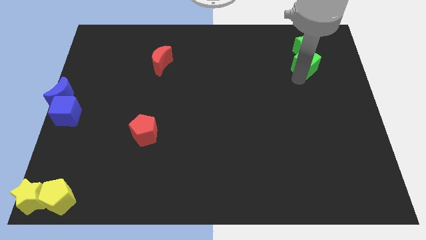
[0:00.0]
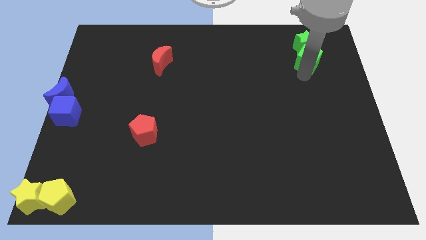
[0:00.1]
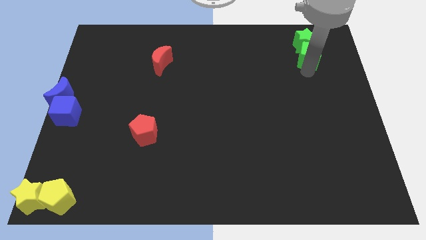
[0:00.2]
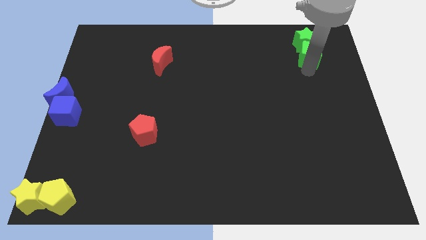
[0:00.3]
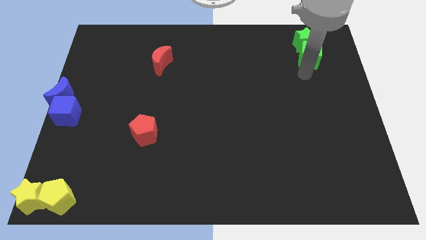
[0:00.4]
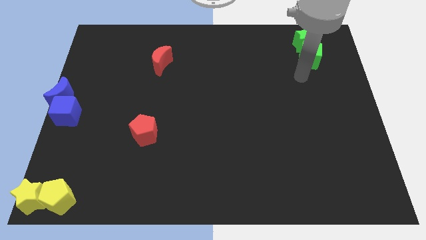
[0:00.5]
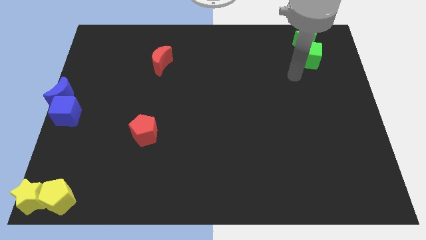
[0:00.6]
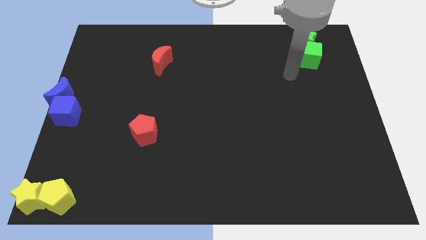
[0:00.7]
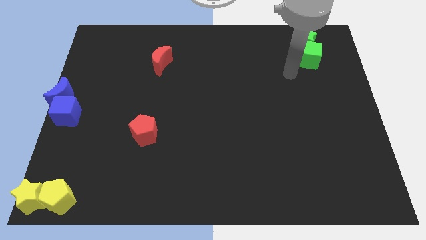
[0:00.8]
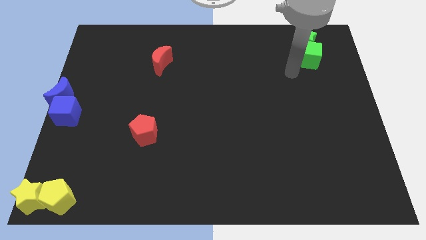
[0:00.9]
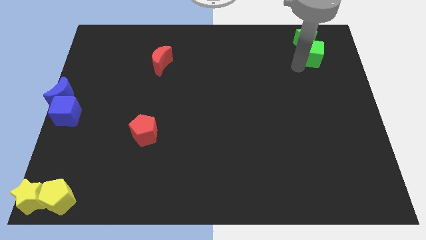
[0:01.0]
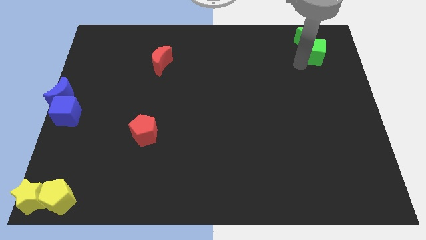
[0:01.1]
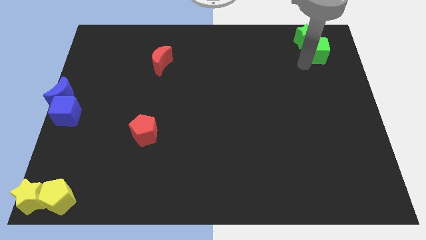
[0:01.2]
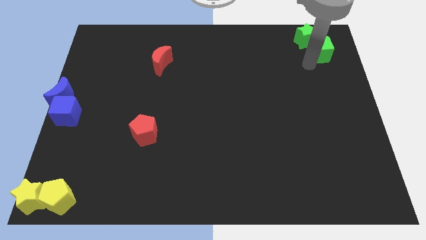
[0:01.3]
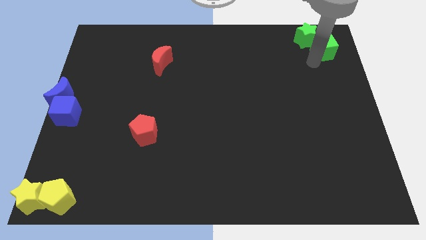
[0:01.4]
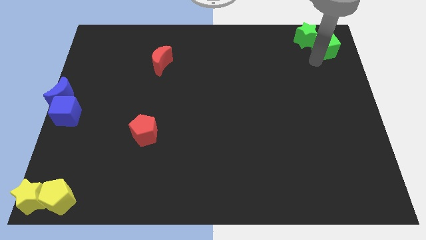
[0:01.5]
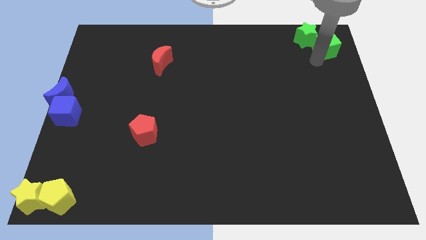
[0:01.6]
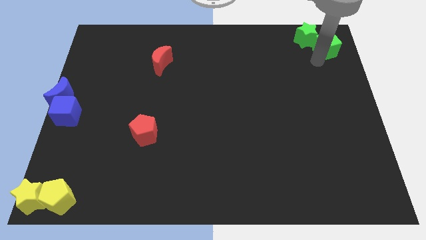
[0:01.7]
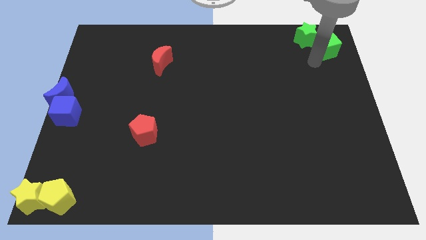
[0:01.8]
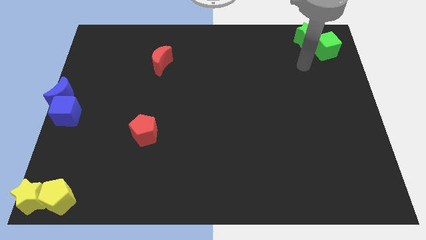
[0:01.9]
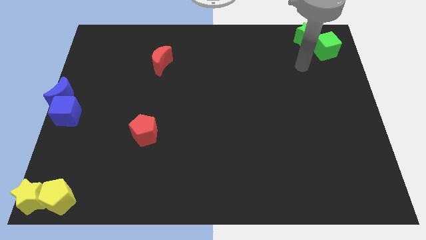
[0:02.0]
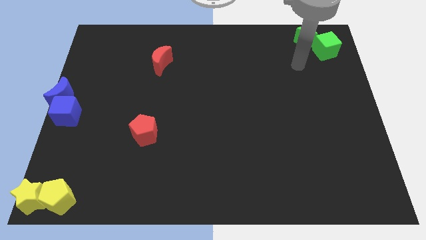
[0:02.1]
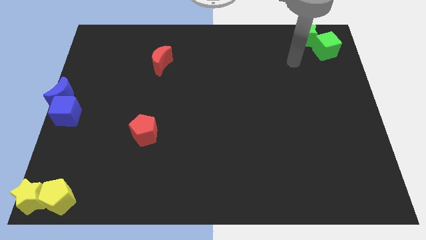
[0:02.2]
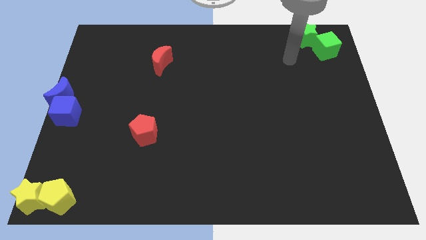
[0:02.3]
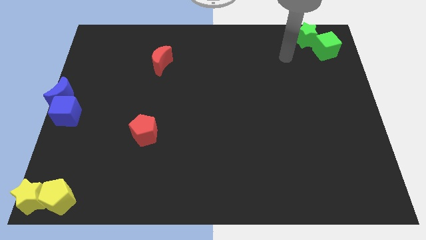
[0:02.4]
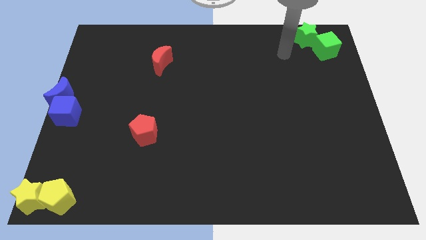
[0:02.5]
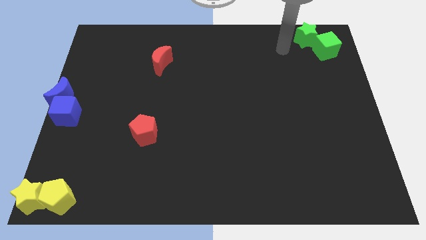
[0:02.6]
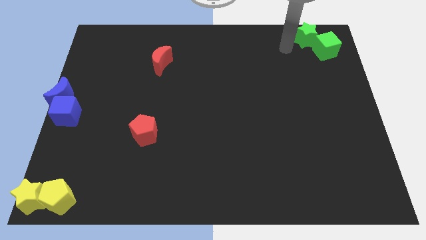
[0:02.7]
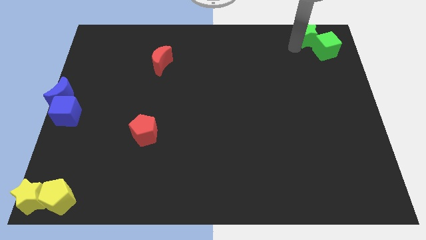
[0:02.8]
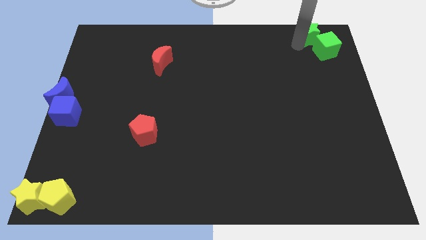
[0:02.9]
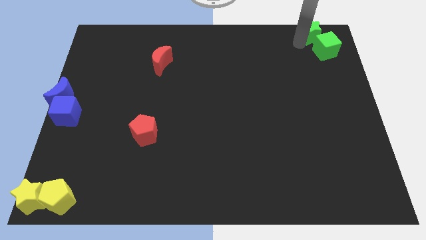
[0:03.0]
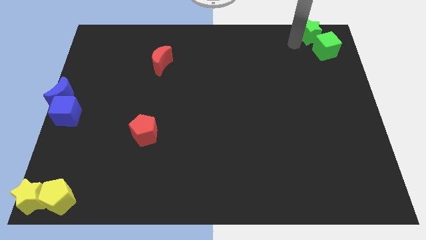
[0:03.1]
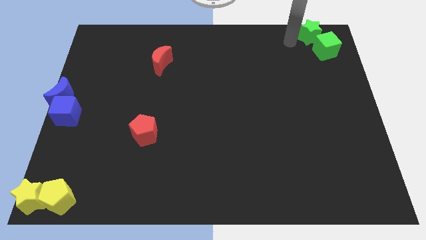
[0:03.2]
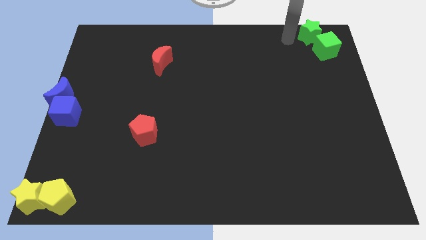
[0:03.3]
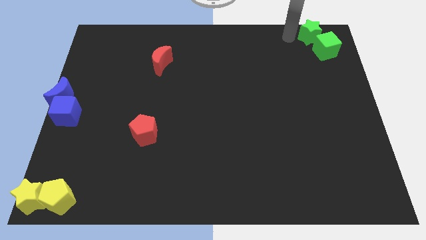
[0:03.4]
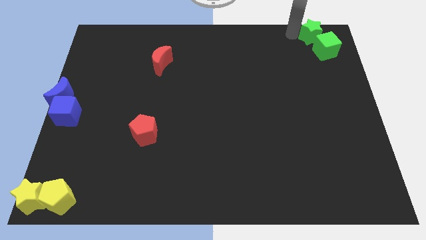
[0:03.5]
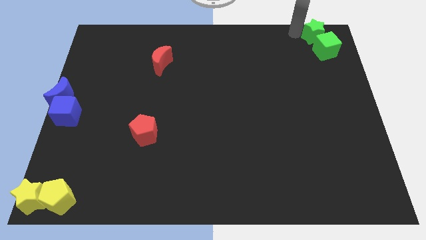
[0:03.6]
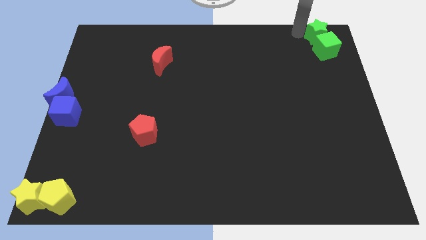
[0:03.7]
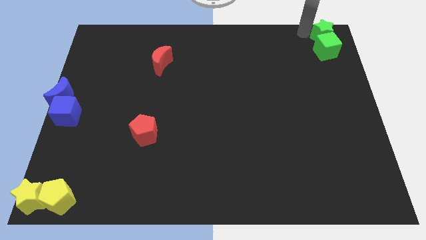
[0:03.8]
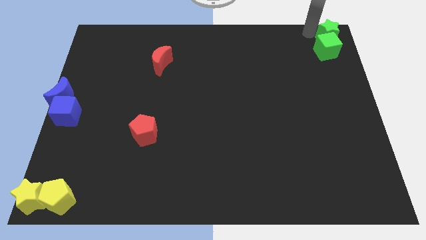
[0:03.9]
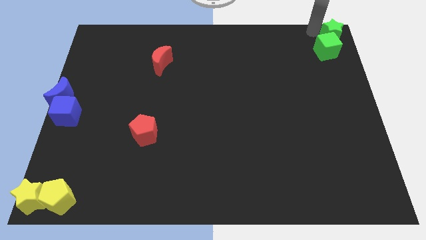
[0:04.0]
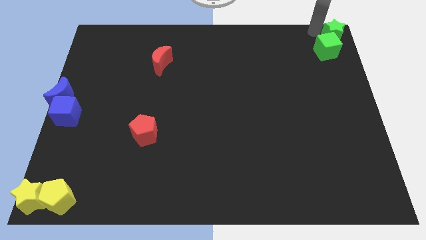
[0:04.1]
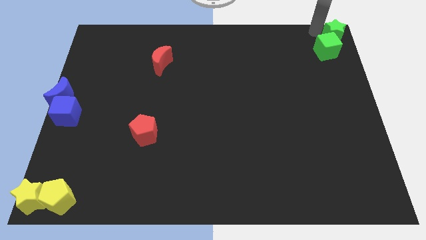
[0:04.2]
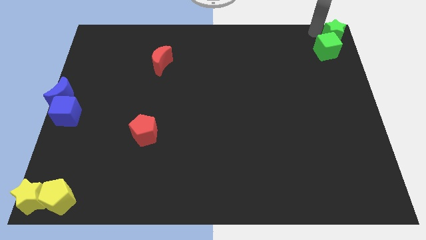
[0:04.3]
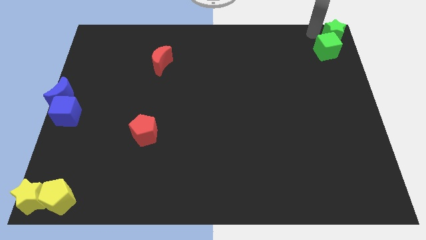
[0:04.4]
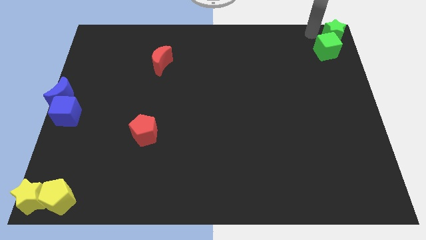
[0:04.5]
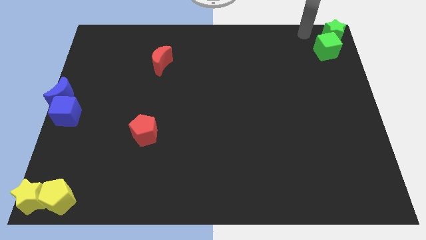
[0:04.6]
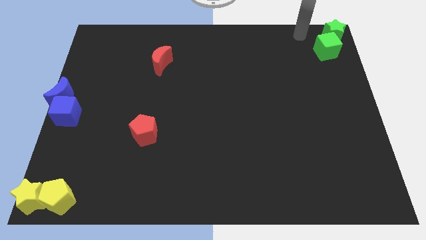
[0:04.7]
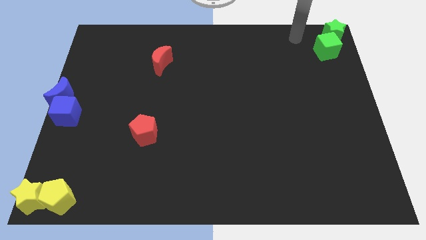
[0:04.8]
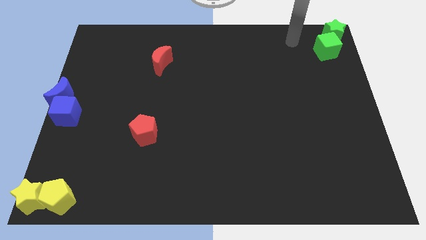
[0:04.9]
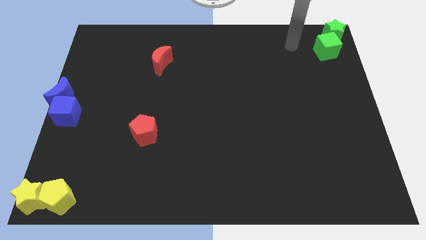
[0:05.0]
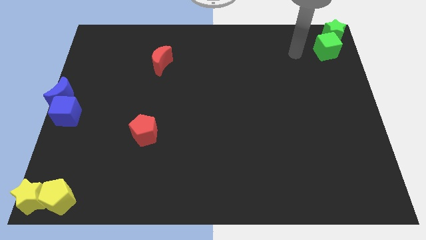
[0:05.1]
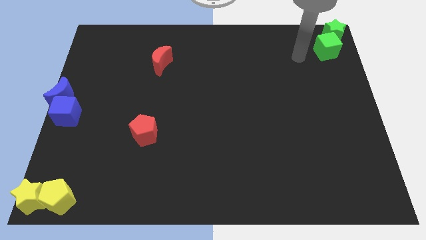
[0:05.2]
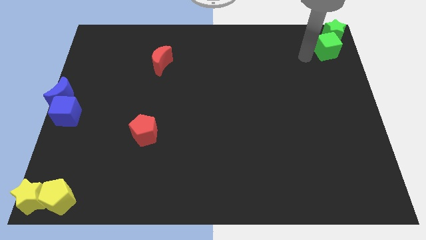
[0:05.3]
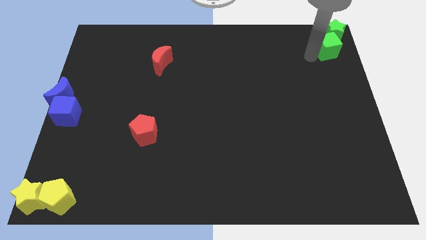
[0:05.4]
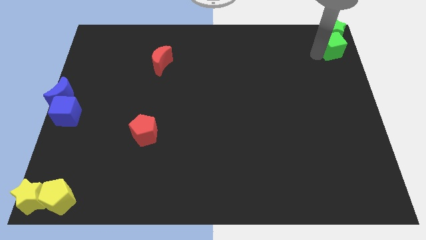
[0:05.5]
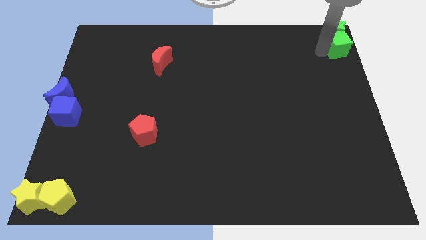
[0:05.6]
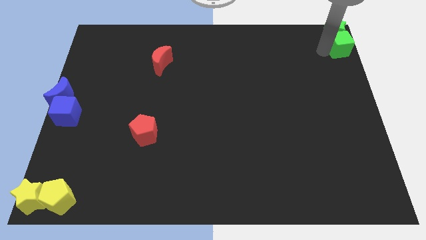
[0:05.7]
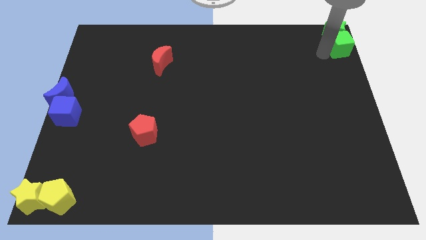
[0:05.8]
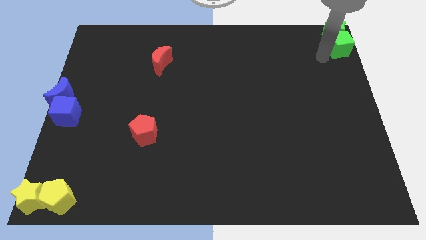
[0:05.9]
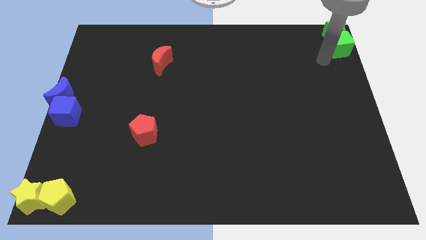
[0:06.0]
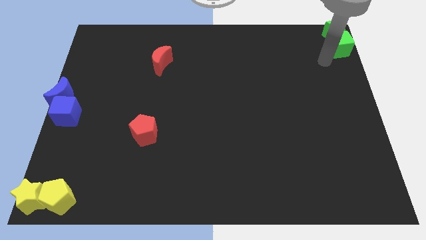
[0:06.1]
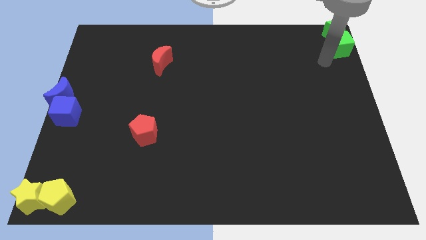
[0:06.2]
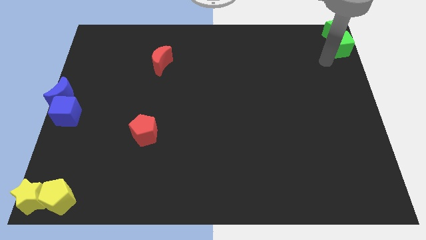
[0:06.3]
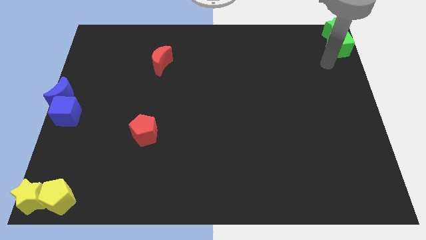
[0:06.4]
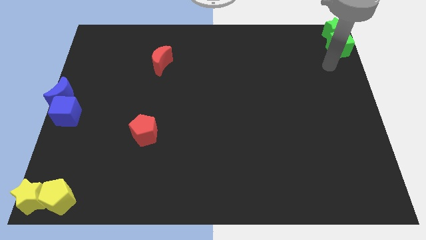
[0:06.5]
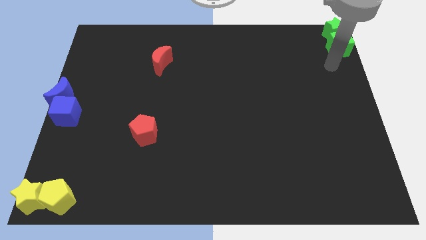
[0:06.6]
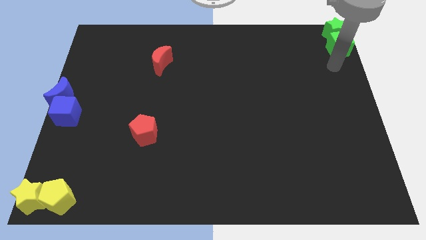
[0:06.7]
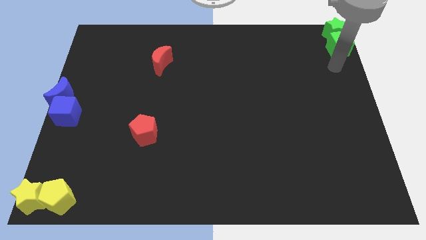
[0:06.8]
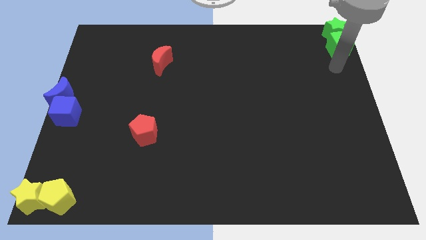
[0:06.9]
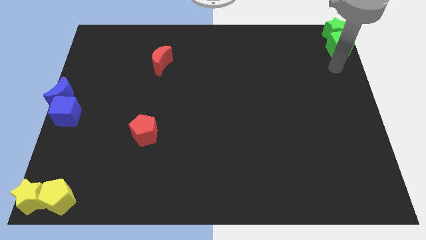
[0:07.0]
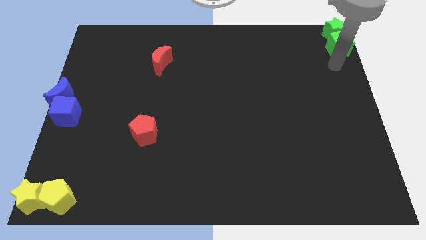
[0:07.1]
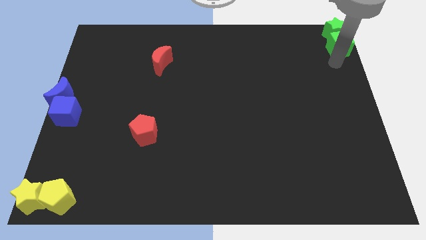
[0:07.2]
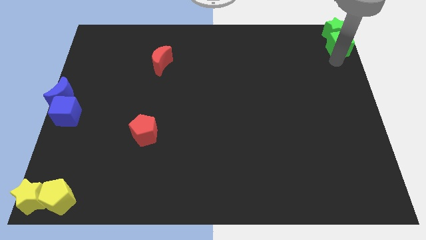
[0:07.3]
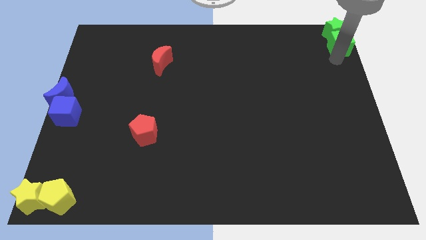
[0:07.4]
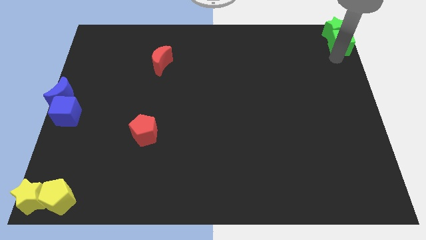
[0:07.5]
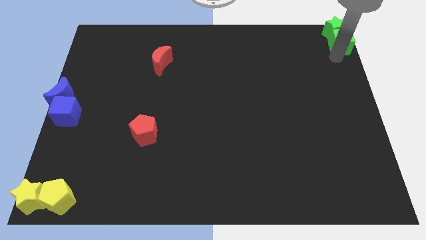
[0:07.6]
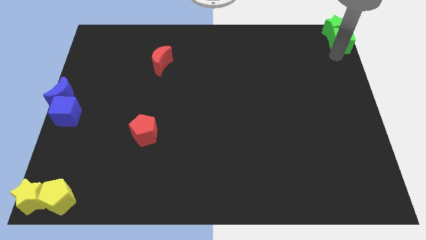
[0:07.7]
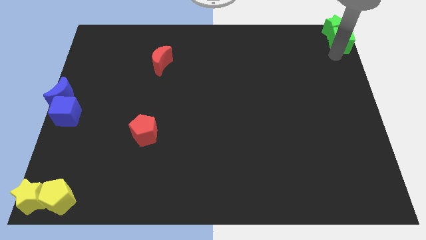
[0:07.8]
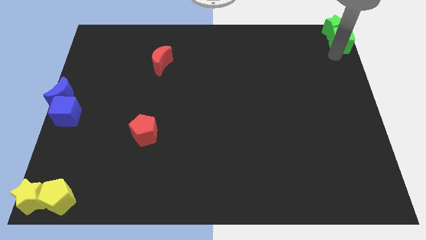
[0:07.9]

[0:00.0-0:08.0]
move the group of green blocks at the top right corner of the board

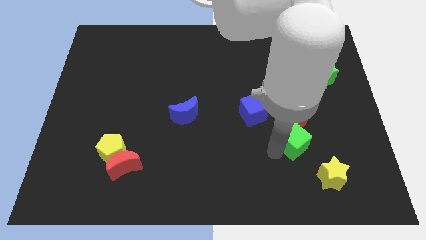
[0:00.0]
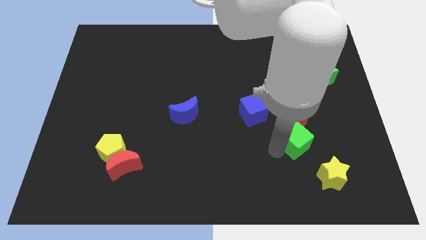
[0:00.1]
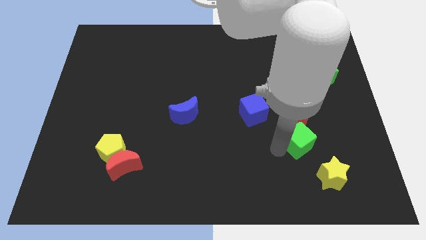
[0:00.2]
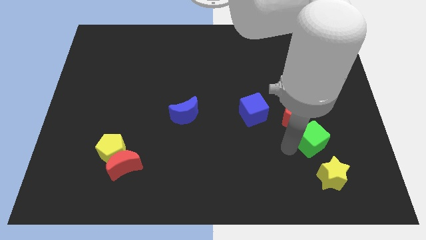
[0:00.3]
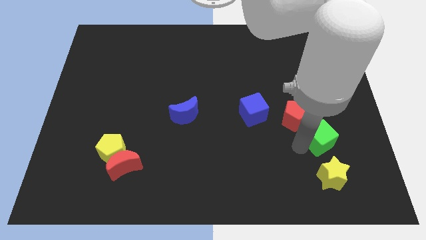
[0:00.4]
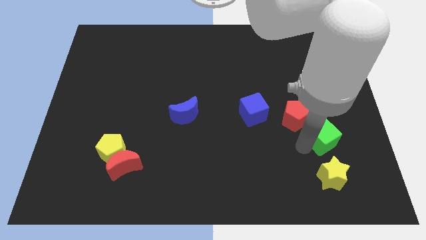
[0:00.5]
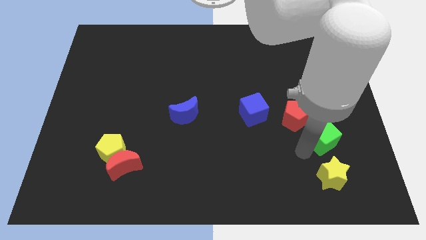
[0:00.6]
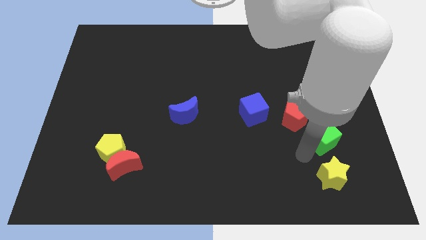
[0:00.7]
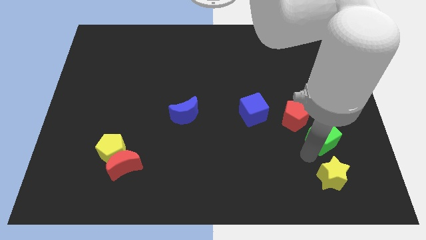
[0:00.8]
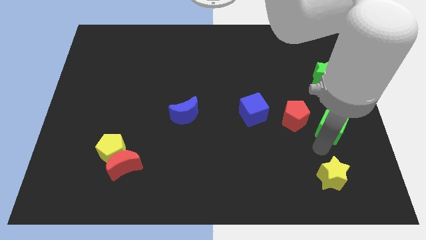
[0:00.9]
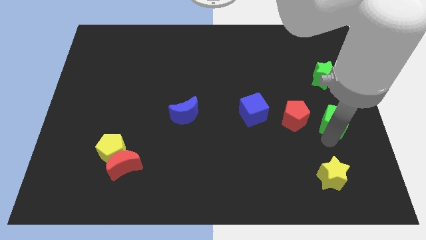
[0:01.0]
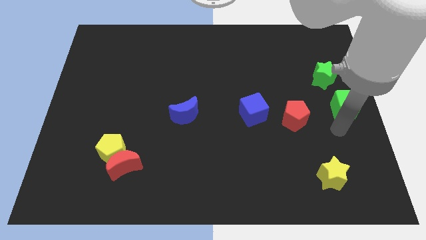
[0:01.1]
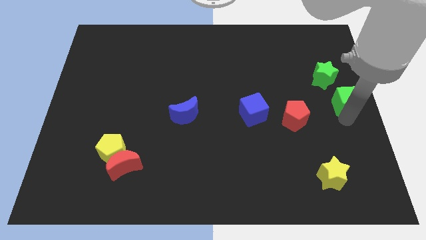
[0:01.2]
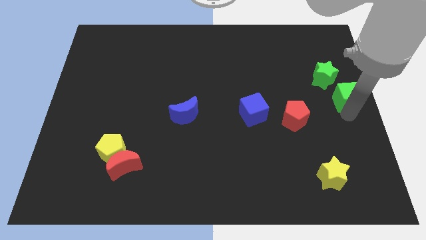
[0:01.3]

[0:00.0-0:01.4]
move the green cube right center of the board
